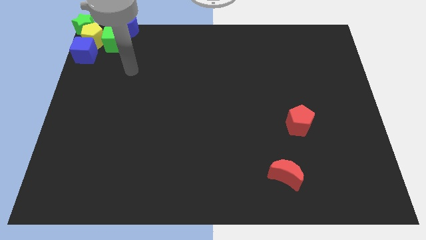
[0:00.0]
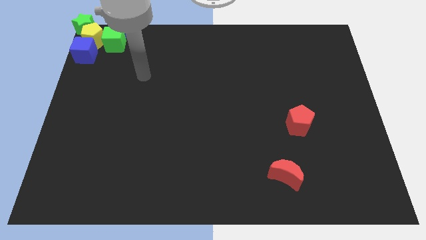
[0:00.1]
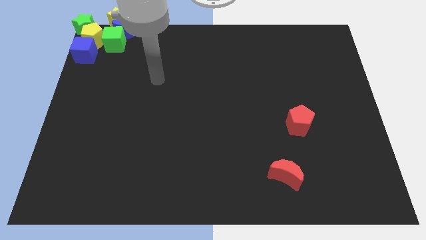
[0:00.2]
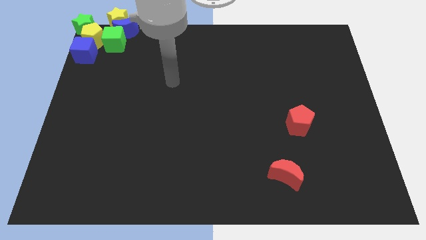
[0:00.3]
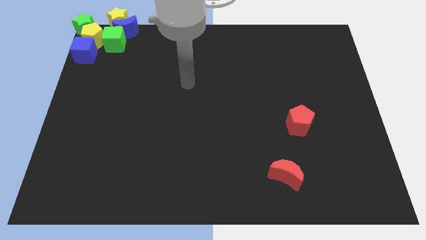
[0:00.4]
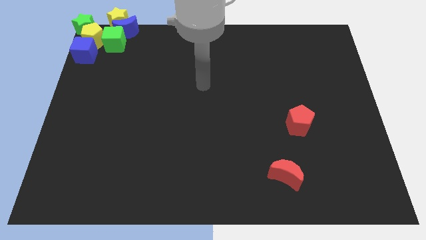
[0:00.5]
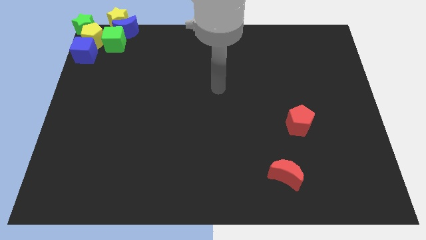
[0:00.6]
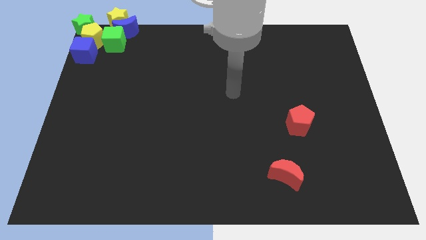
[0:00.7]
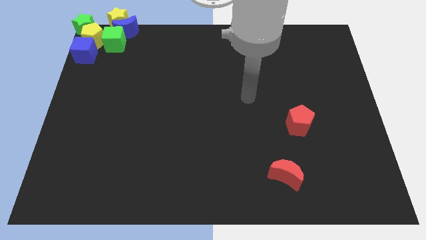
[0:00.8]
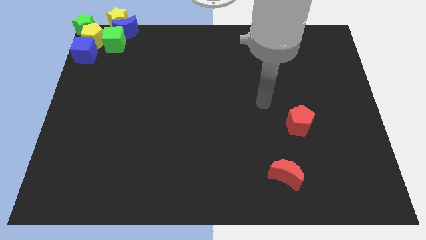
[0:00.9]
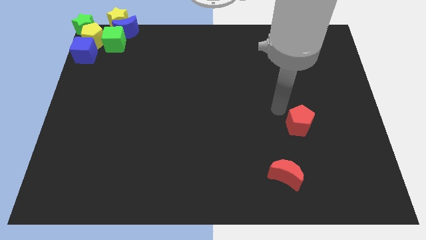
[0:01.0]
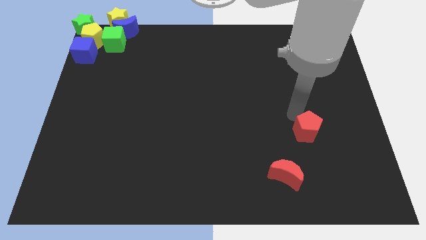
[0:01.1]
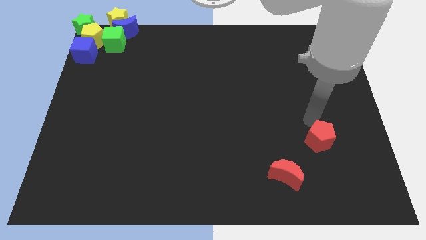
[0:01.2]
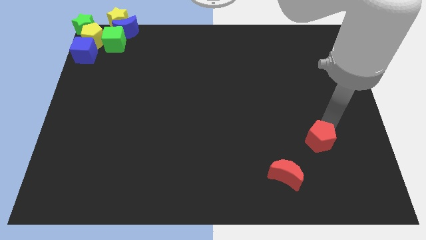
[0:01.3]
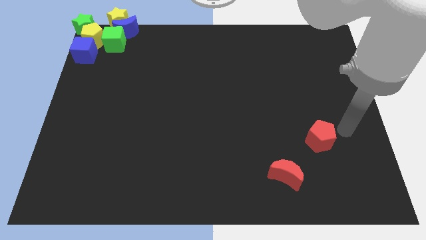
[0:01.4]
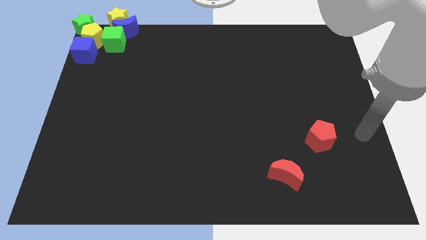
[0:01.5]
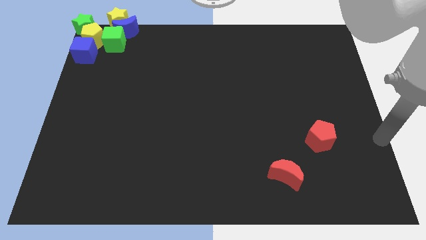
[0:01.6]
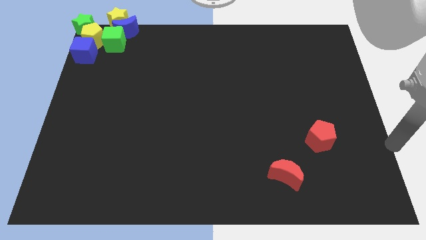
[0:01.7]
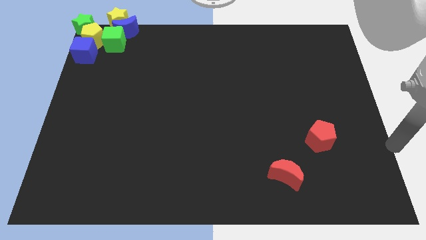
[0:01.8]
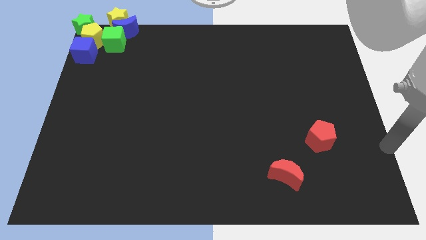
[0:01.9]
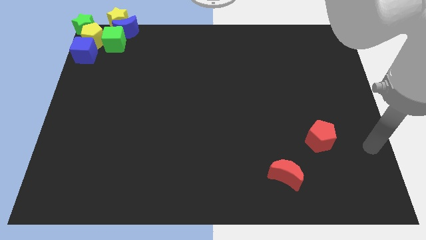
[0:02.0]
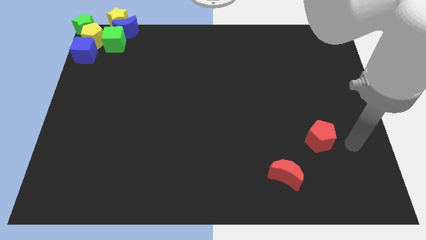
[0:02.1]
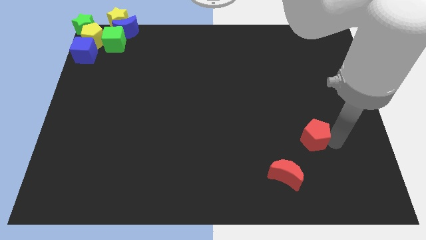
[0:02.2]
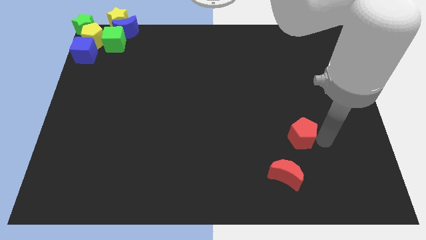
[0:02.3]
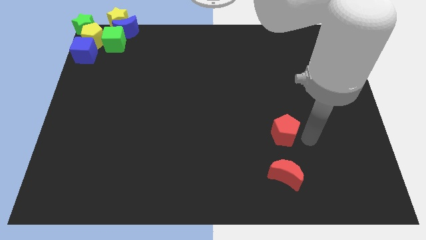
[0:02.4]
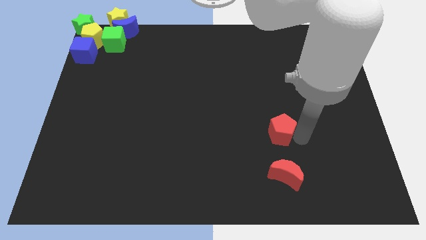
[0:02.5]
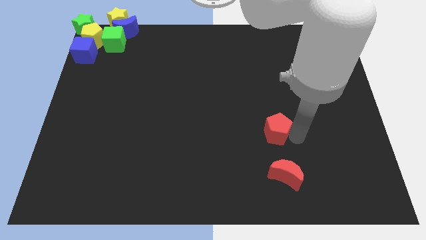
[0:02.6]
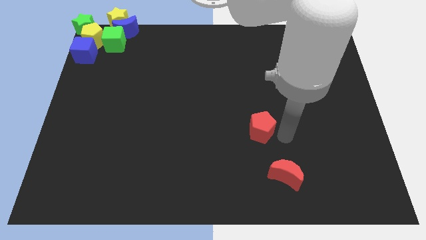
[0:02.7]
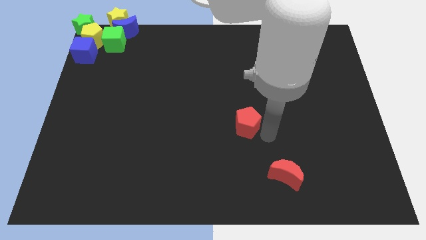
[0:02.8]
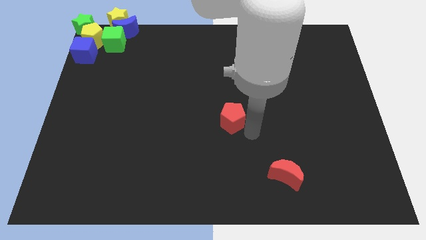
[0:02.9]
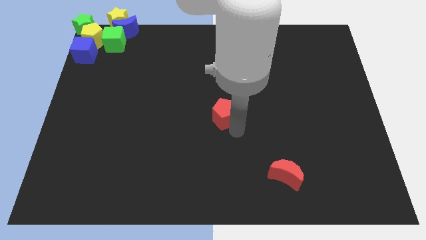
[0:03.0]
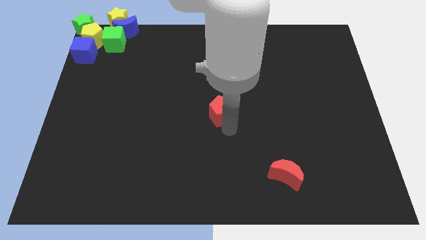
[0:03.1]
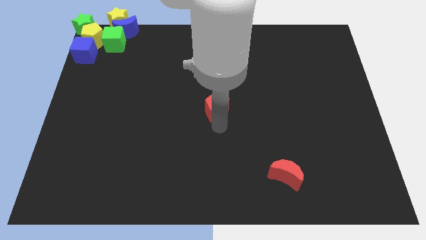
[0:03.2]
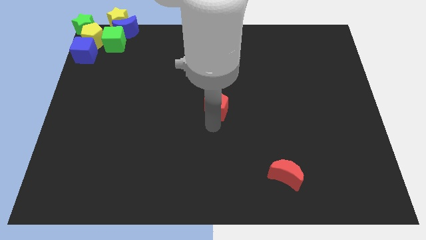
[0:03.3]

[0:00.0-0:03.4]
place red pentagon to the center of the board

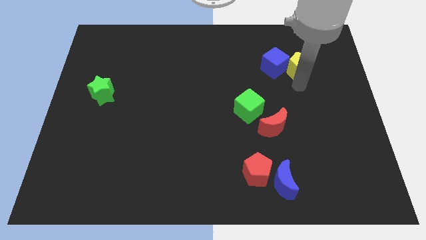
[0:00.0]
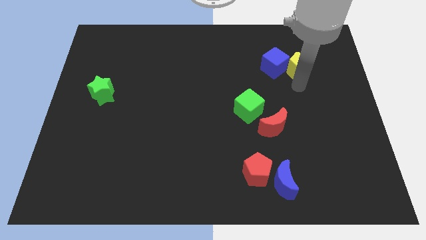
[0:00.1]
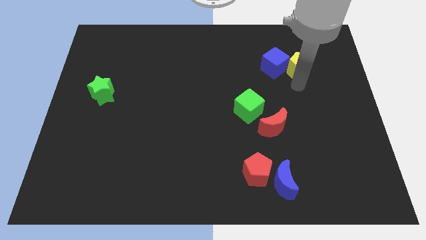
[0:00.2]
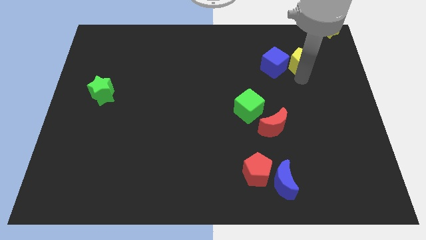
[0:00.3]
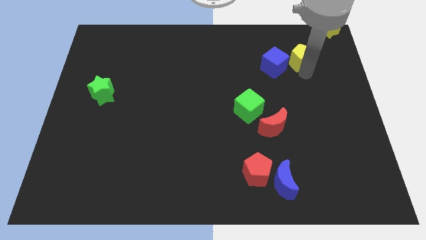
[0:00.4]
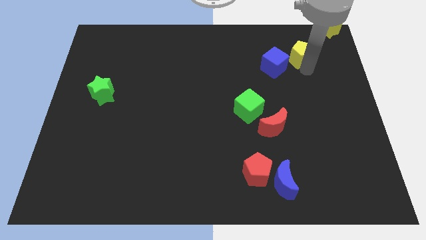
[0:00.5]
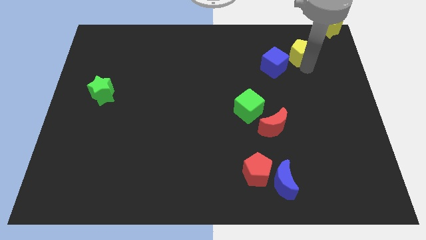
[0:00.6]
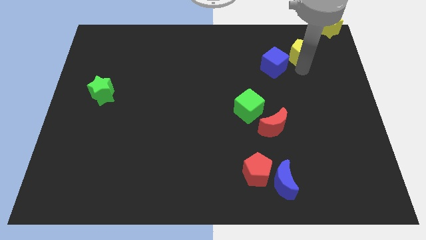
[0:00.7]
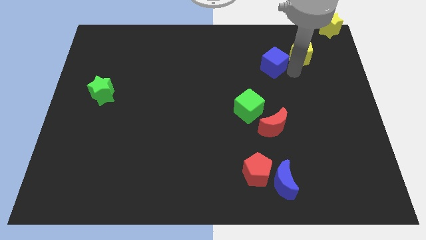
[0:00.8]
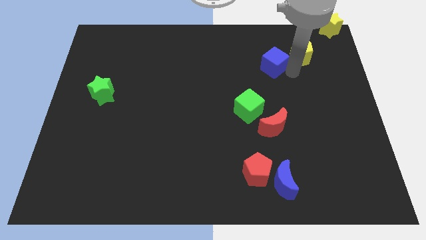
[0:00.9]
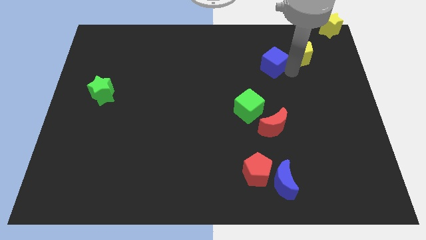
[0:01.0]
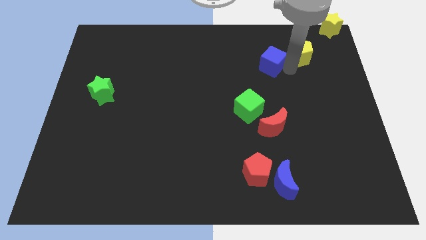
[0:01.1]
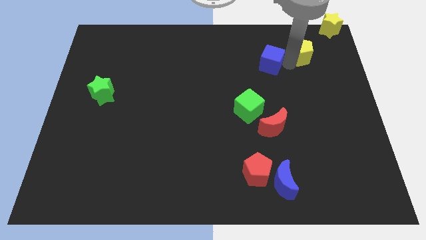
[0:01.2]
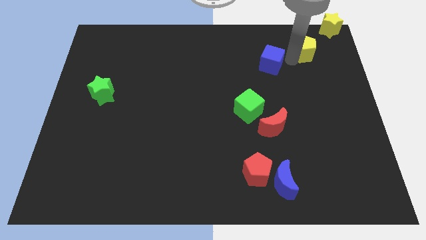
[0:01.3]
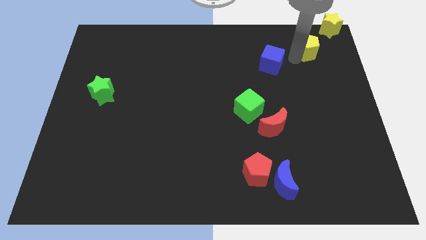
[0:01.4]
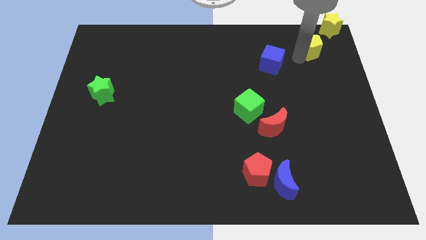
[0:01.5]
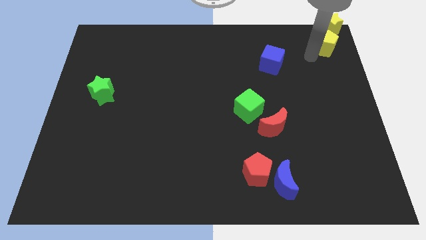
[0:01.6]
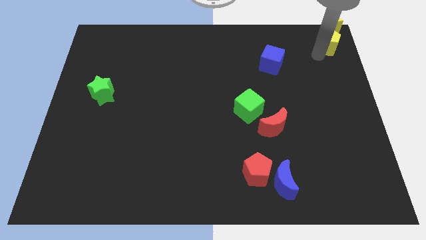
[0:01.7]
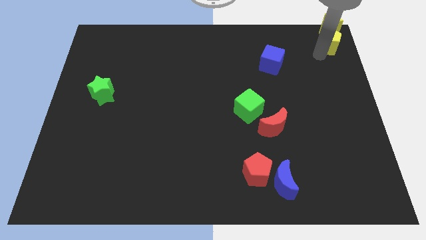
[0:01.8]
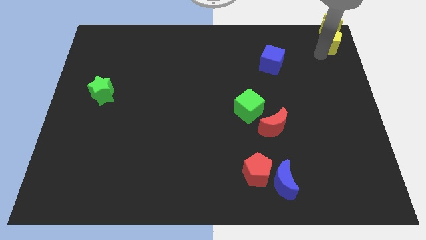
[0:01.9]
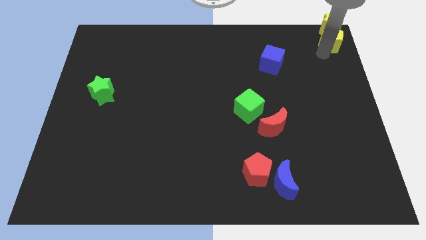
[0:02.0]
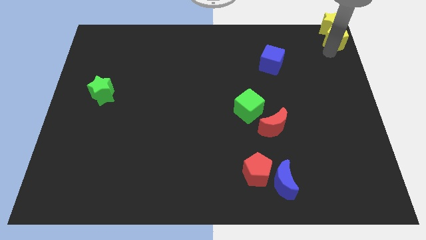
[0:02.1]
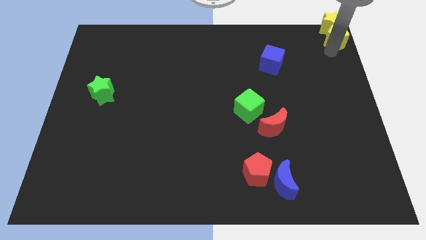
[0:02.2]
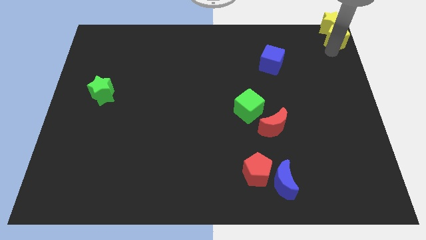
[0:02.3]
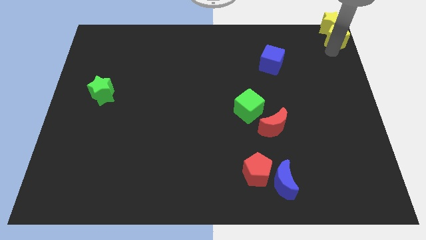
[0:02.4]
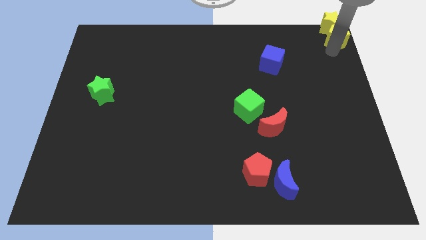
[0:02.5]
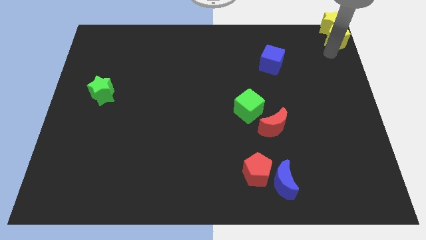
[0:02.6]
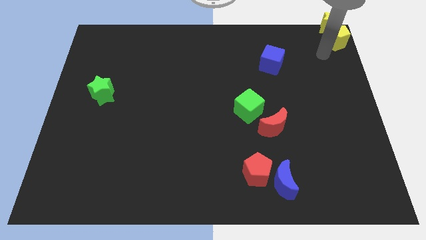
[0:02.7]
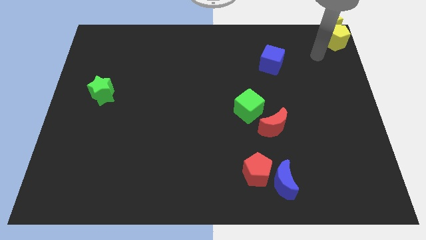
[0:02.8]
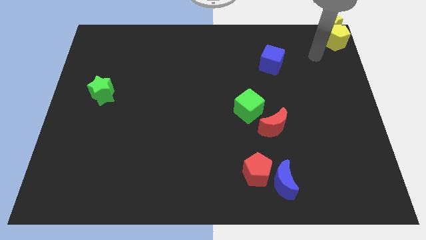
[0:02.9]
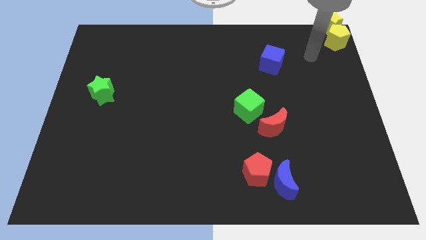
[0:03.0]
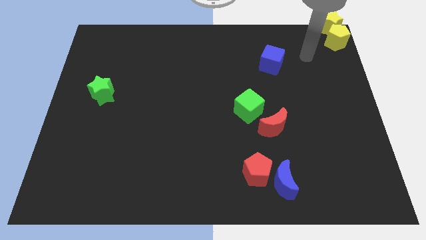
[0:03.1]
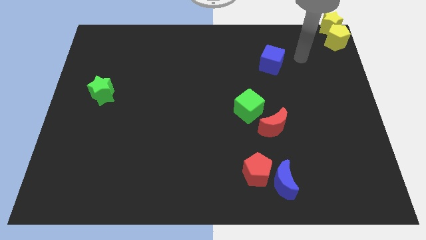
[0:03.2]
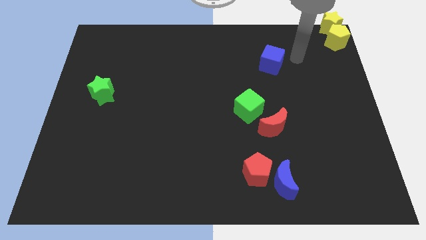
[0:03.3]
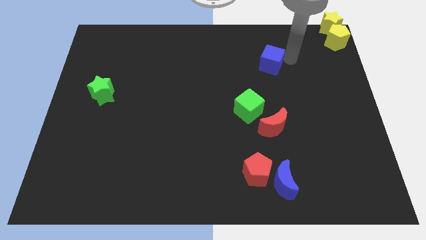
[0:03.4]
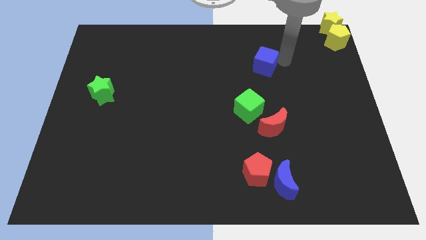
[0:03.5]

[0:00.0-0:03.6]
place yellow pentagon close to yellow star

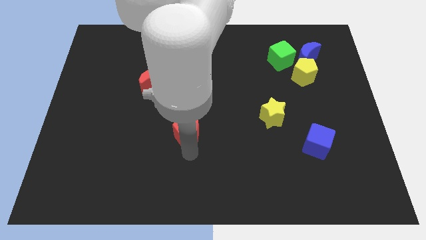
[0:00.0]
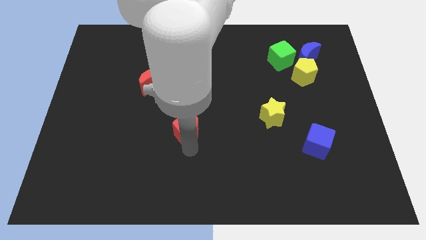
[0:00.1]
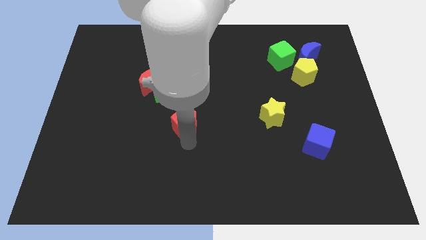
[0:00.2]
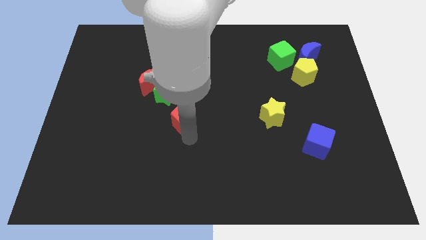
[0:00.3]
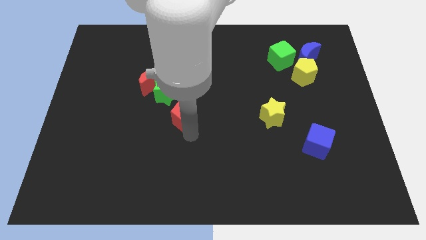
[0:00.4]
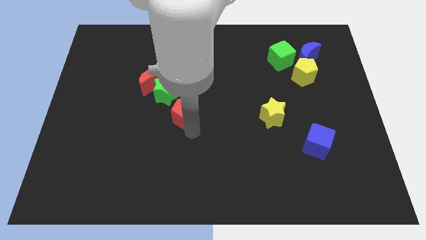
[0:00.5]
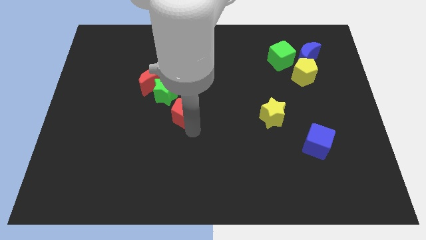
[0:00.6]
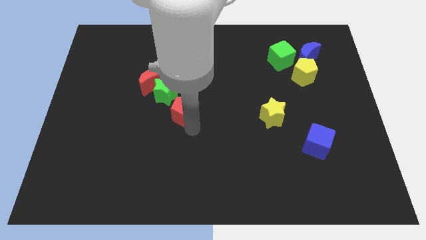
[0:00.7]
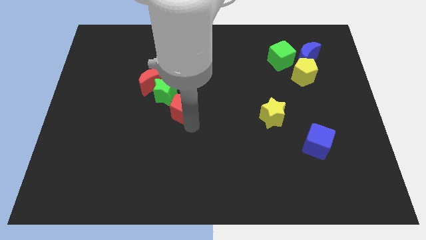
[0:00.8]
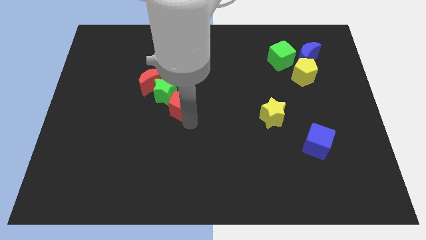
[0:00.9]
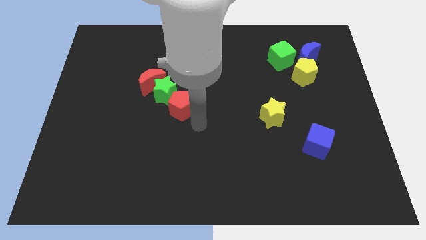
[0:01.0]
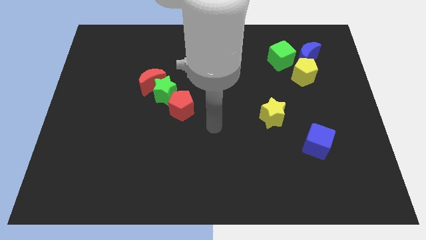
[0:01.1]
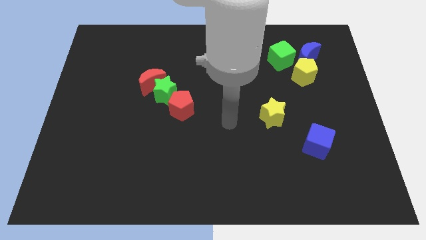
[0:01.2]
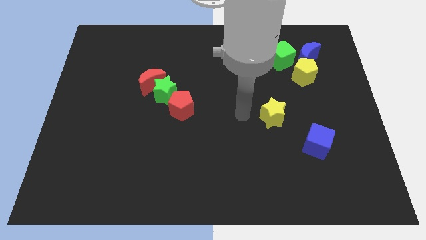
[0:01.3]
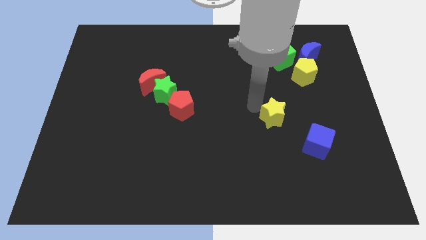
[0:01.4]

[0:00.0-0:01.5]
place the red pentagon to the right bottom of the green star

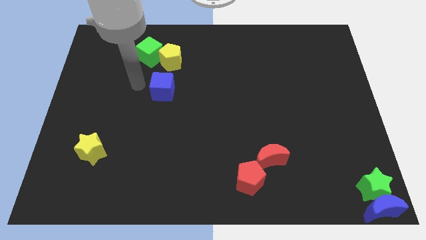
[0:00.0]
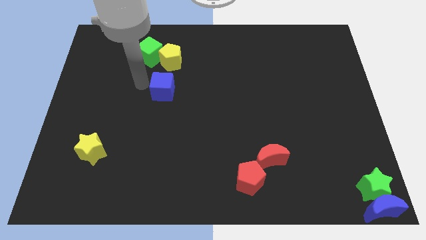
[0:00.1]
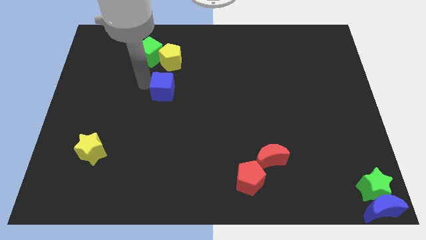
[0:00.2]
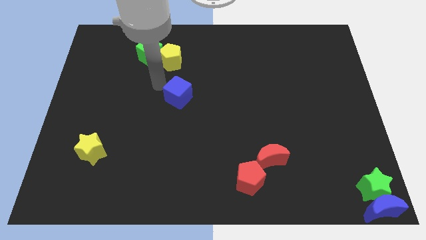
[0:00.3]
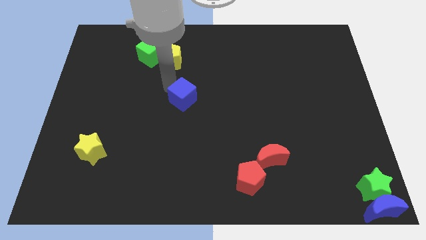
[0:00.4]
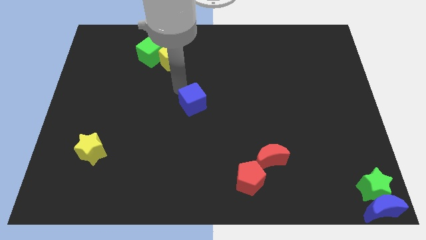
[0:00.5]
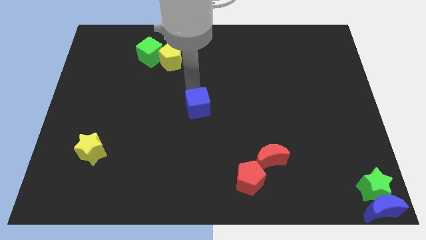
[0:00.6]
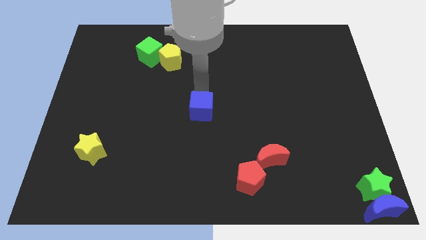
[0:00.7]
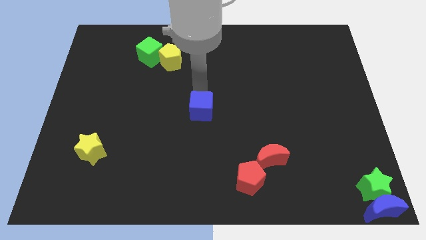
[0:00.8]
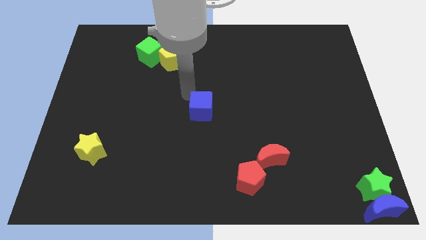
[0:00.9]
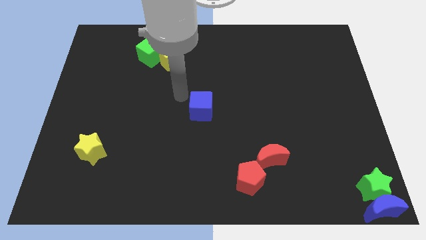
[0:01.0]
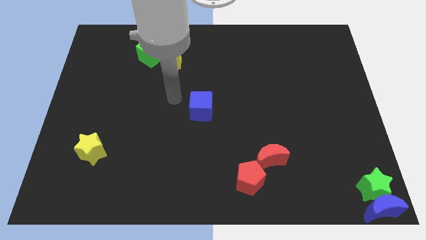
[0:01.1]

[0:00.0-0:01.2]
push the blue cube to the center of the board
